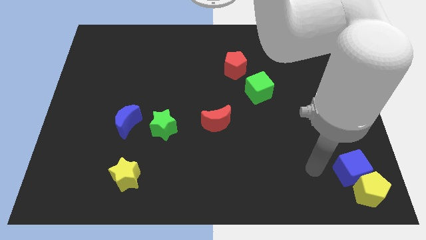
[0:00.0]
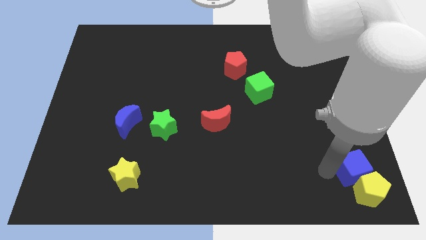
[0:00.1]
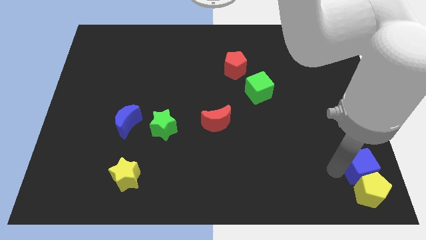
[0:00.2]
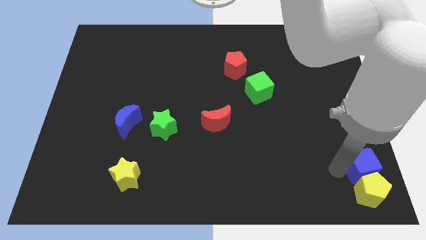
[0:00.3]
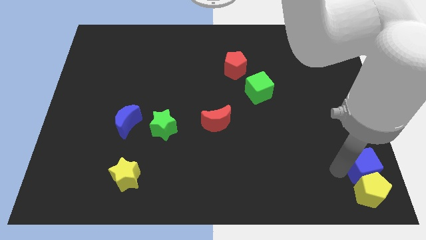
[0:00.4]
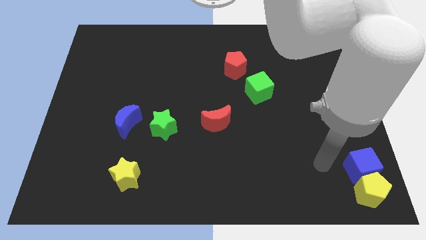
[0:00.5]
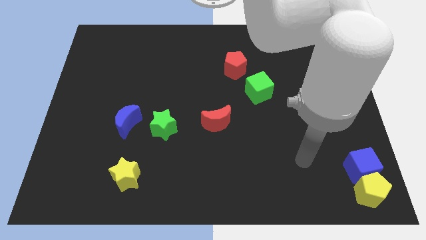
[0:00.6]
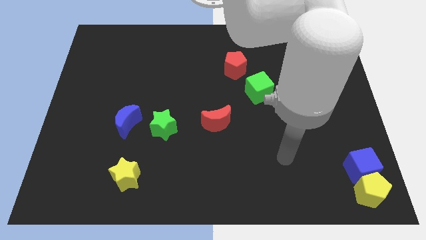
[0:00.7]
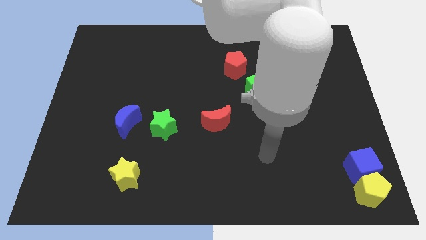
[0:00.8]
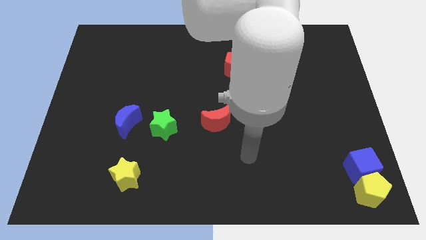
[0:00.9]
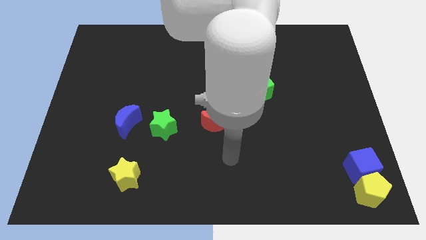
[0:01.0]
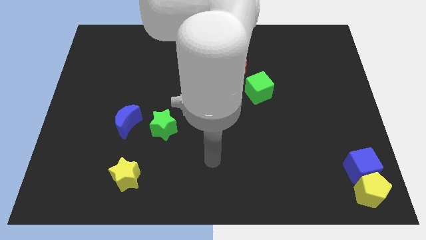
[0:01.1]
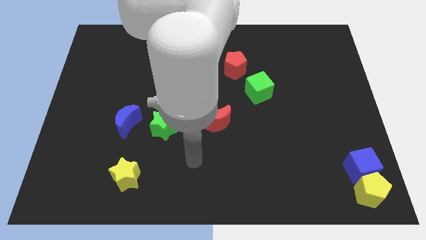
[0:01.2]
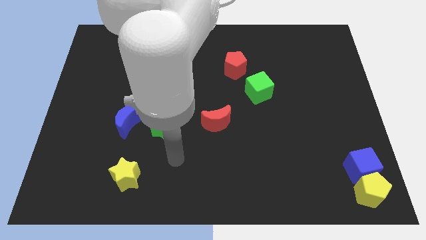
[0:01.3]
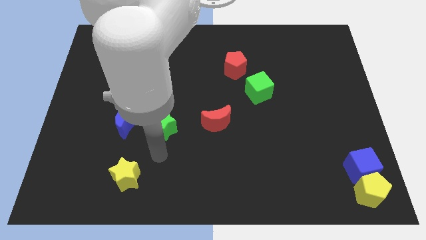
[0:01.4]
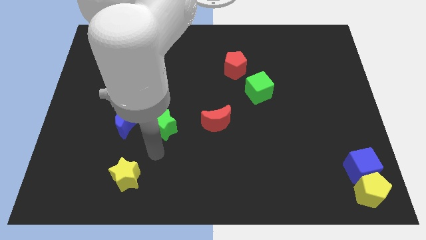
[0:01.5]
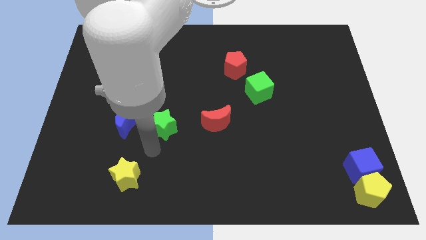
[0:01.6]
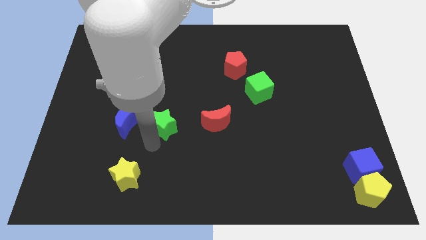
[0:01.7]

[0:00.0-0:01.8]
move the arm below the green star

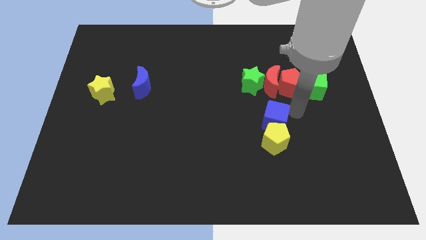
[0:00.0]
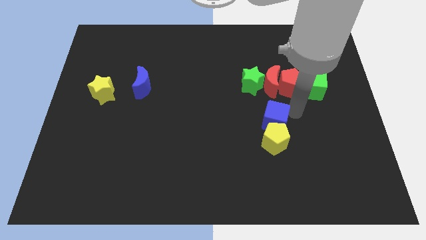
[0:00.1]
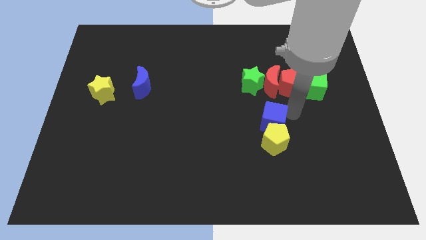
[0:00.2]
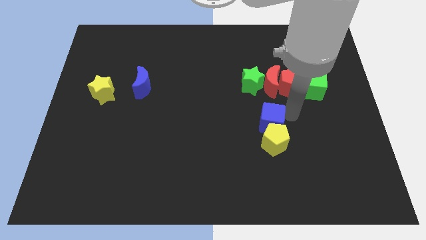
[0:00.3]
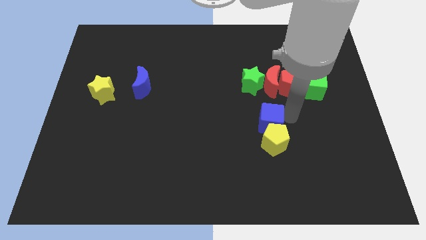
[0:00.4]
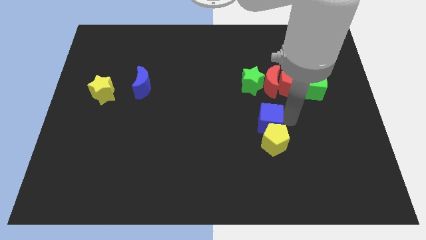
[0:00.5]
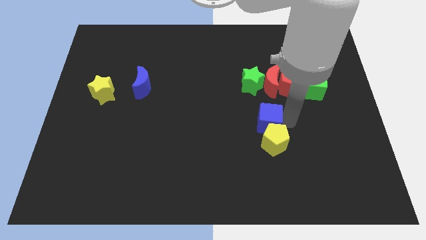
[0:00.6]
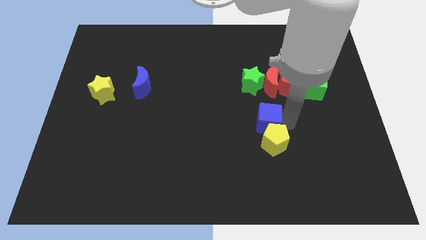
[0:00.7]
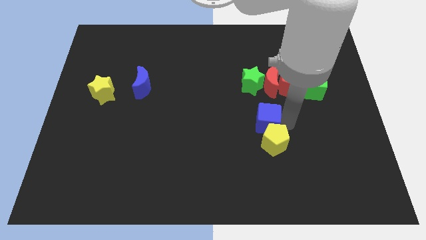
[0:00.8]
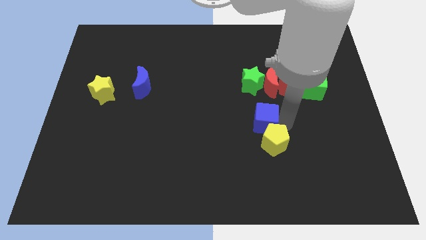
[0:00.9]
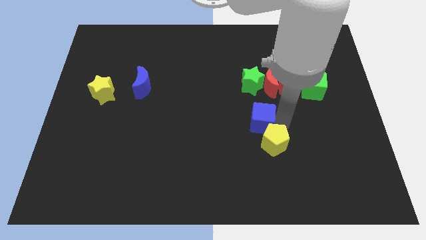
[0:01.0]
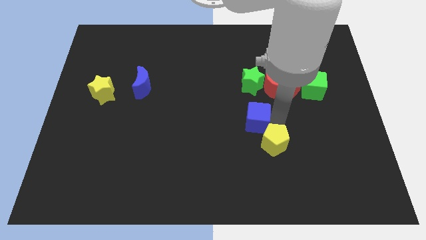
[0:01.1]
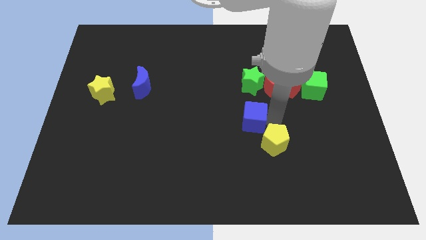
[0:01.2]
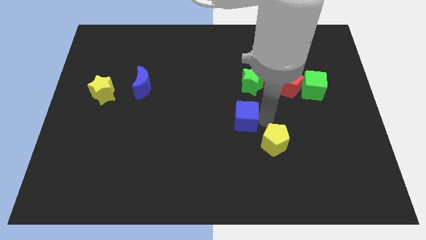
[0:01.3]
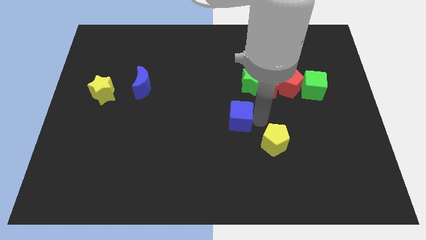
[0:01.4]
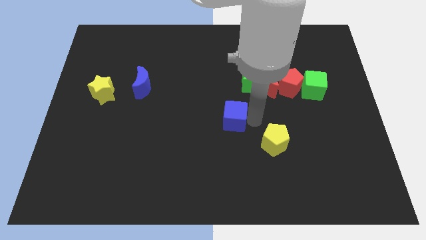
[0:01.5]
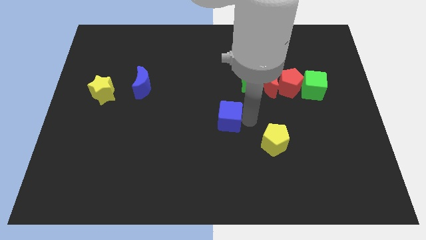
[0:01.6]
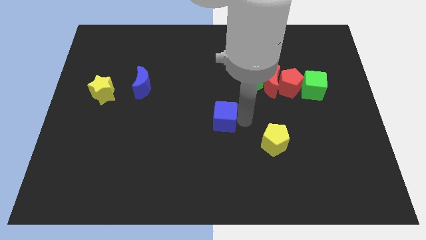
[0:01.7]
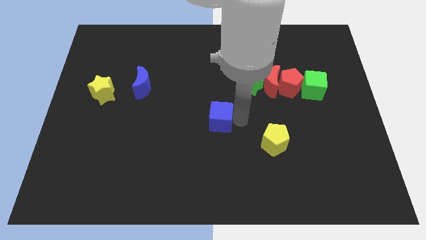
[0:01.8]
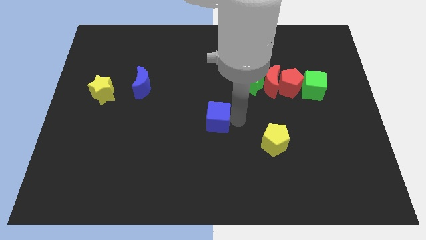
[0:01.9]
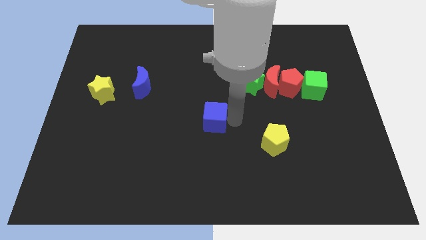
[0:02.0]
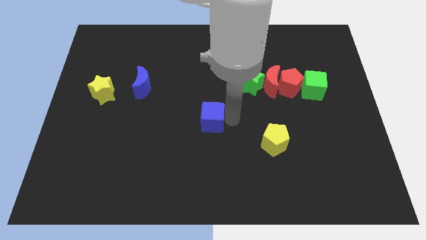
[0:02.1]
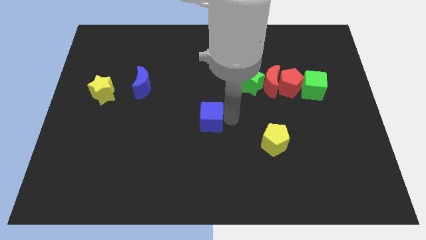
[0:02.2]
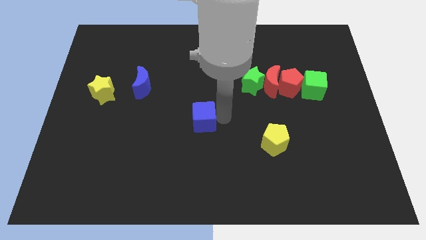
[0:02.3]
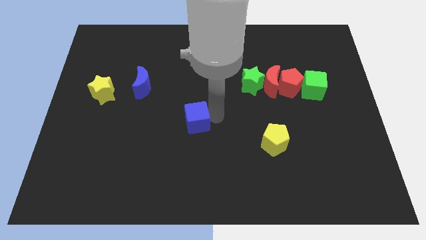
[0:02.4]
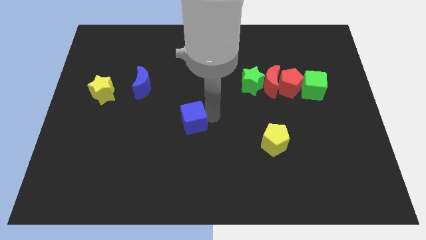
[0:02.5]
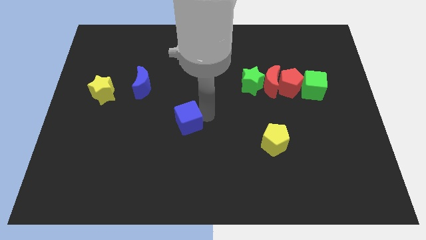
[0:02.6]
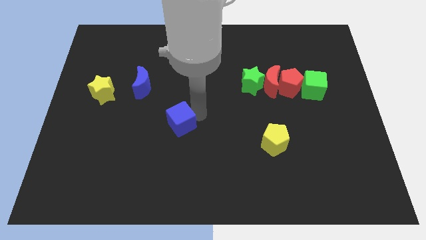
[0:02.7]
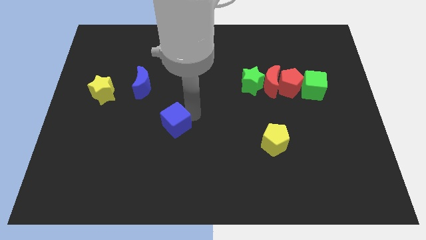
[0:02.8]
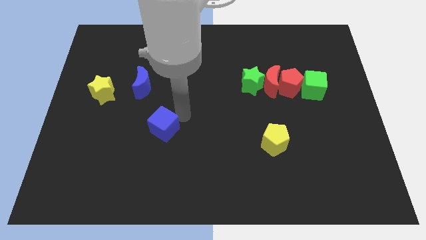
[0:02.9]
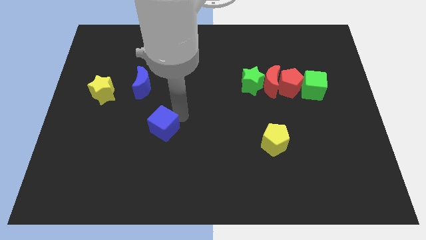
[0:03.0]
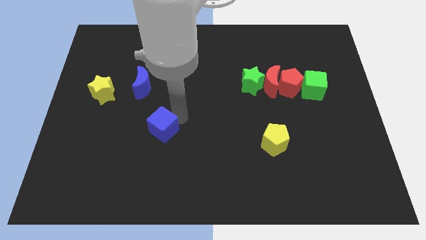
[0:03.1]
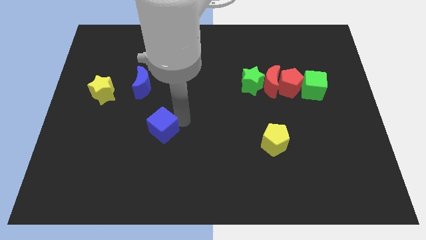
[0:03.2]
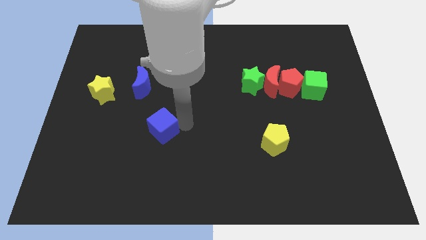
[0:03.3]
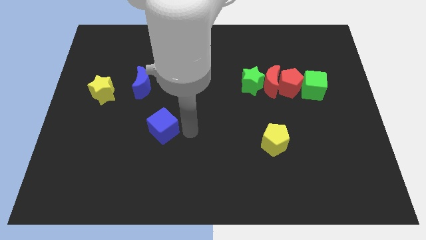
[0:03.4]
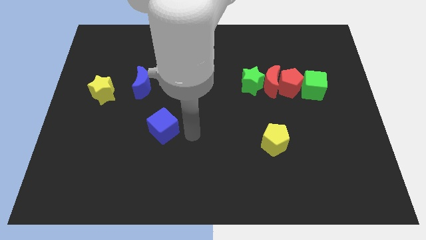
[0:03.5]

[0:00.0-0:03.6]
move blue cube diagonal to the right bottom of the blue crescent

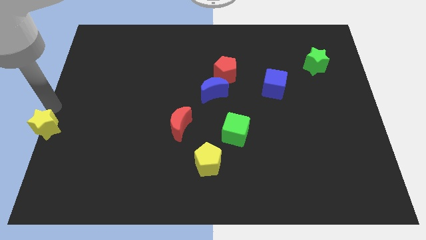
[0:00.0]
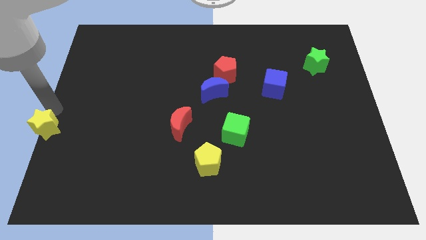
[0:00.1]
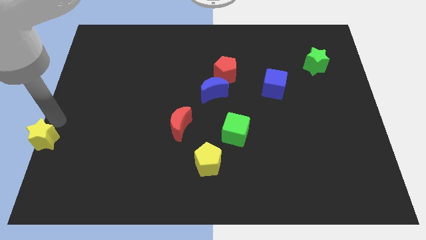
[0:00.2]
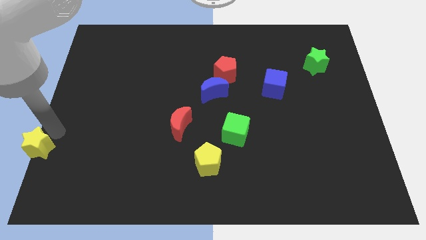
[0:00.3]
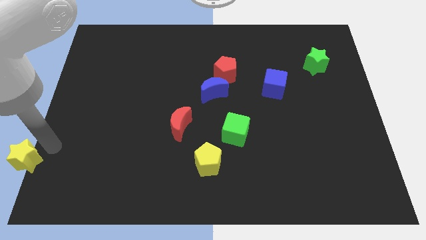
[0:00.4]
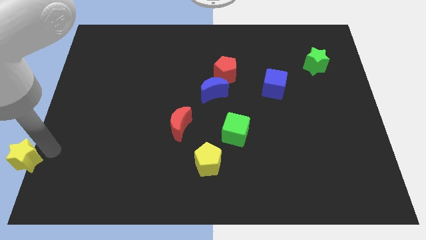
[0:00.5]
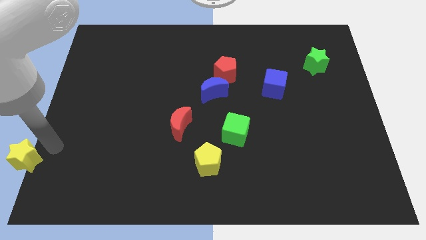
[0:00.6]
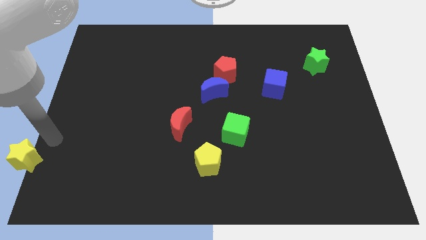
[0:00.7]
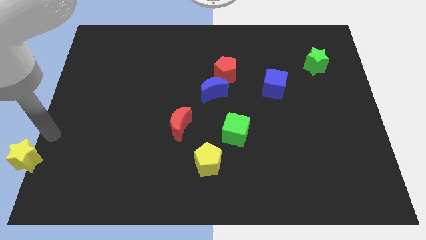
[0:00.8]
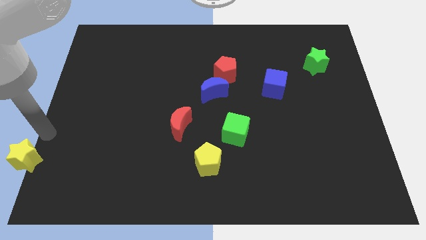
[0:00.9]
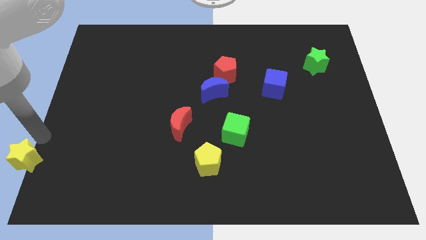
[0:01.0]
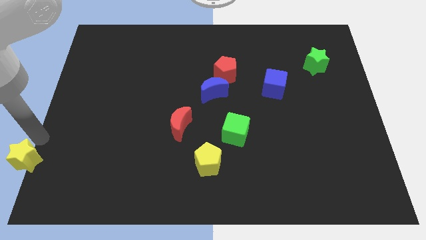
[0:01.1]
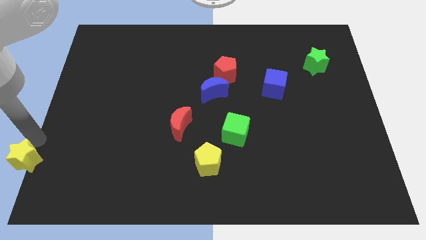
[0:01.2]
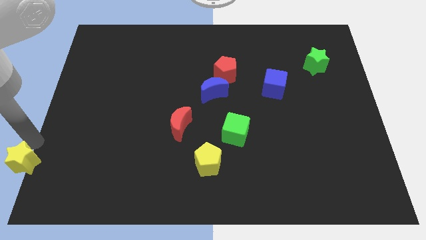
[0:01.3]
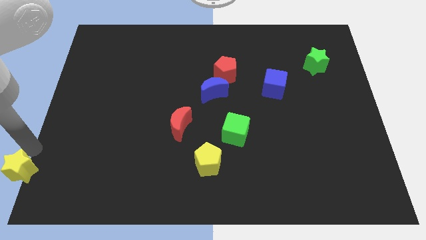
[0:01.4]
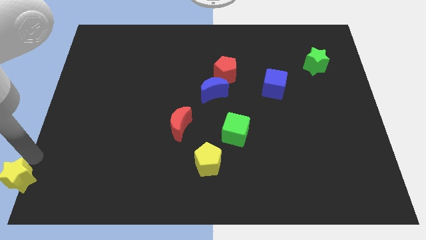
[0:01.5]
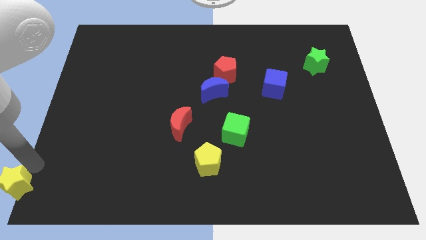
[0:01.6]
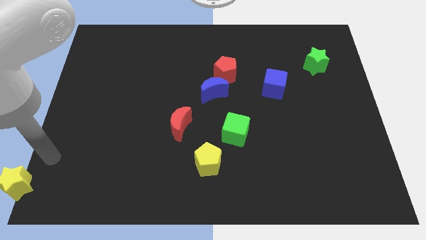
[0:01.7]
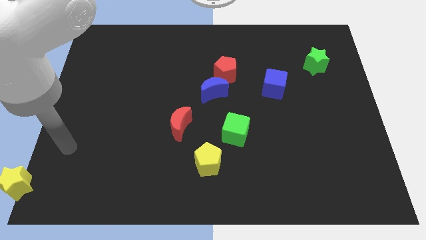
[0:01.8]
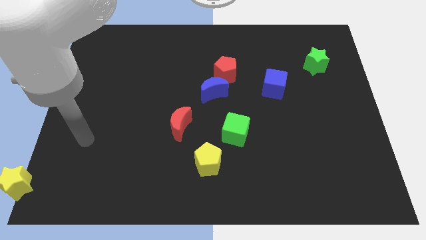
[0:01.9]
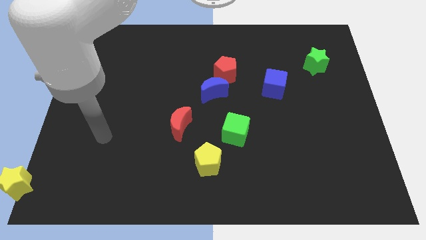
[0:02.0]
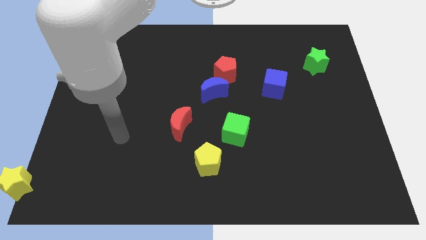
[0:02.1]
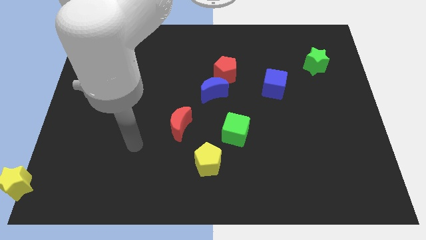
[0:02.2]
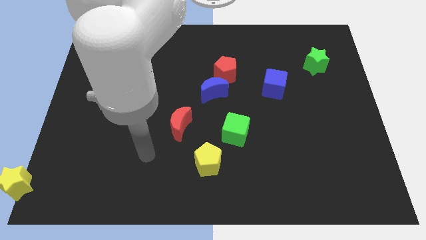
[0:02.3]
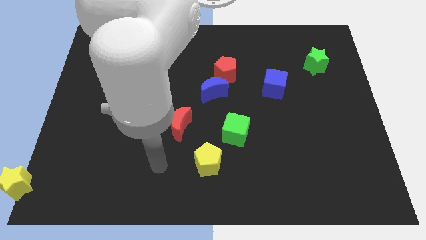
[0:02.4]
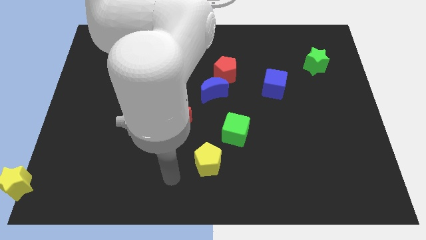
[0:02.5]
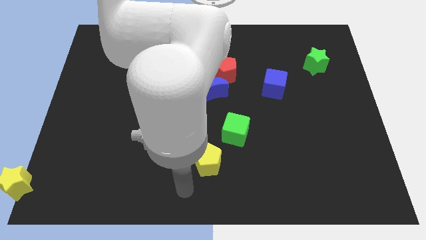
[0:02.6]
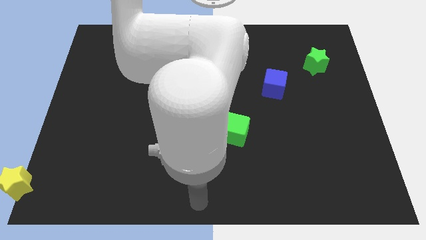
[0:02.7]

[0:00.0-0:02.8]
push the yellow star to the bottom left corner of the board

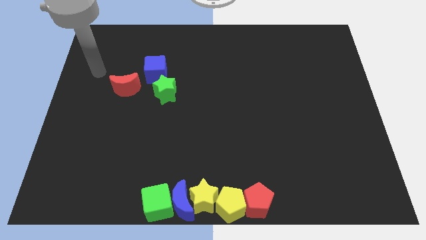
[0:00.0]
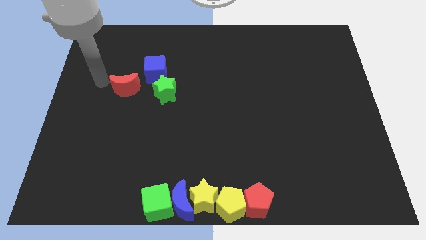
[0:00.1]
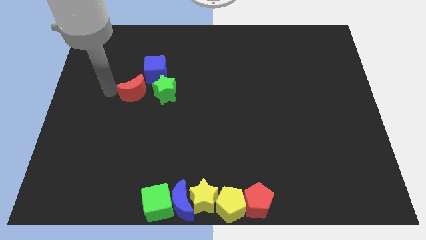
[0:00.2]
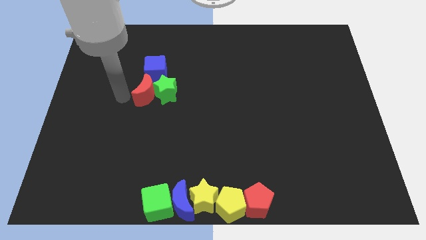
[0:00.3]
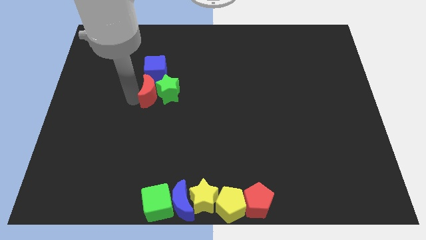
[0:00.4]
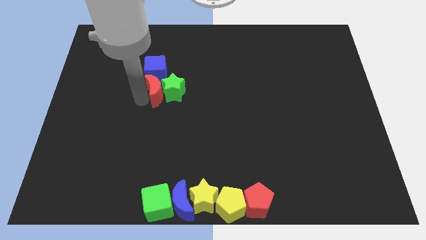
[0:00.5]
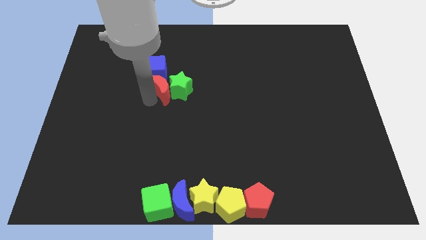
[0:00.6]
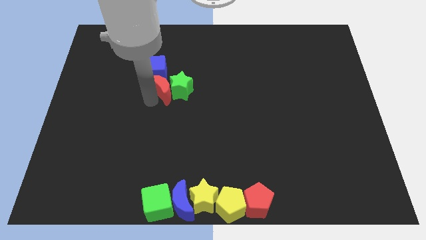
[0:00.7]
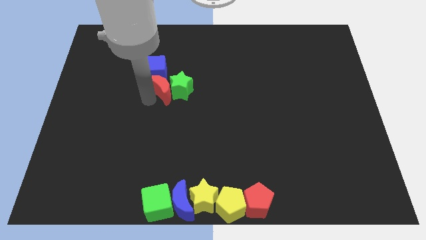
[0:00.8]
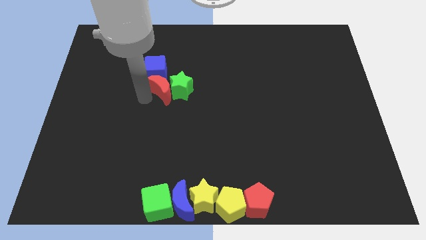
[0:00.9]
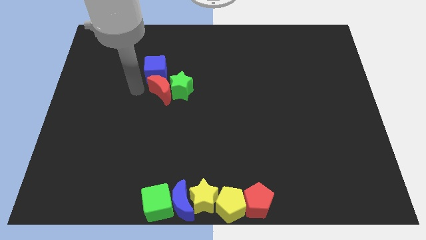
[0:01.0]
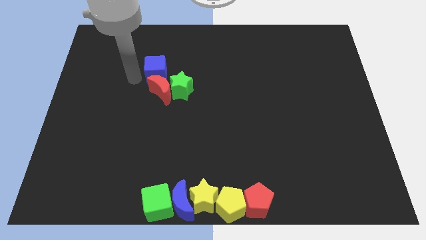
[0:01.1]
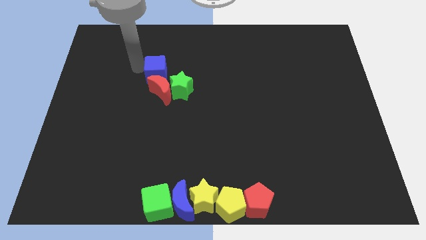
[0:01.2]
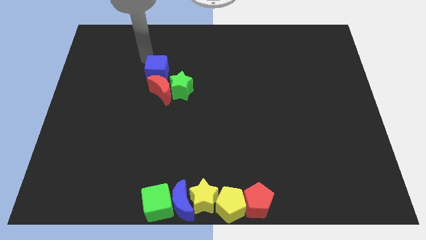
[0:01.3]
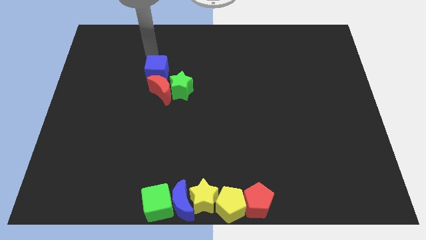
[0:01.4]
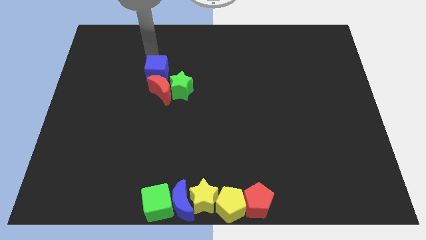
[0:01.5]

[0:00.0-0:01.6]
slide the red moon into the green star
